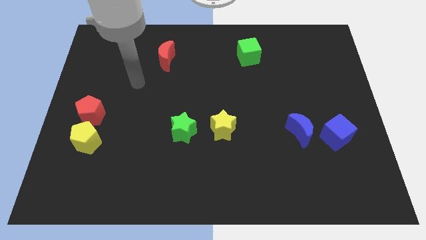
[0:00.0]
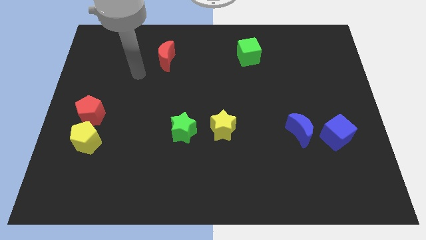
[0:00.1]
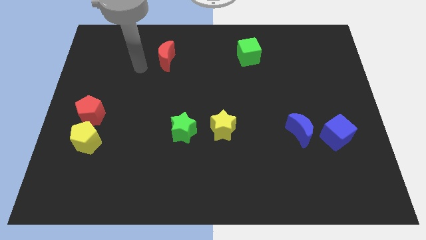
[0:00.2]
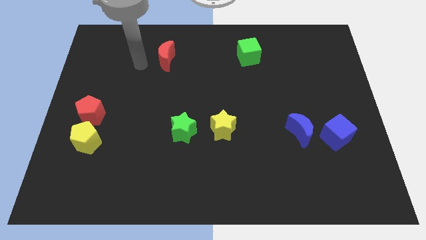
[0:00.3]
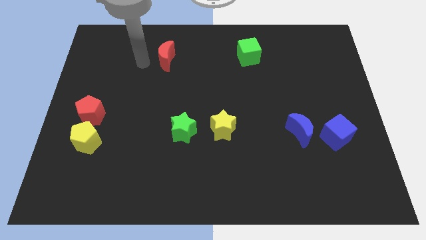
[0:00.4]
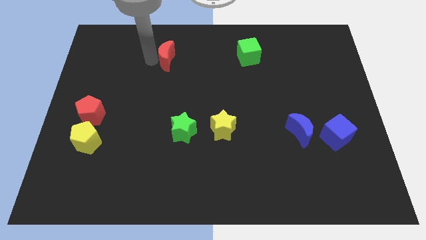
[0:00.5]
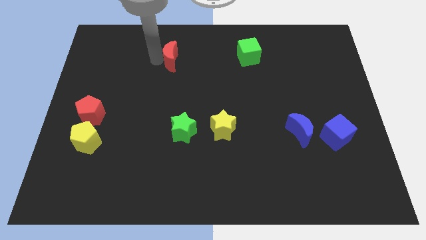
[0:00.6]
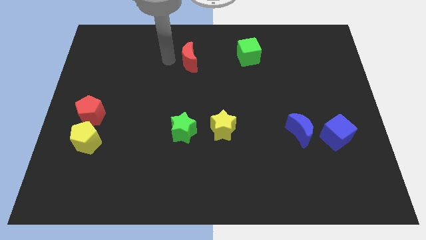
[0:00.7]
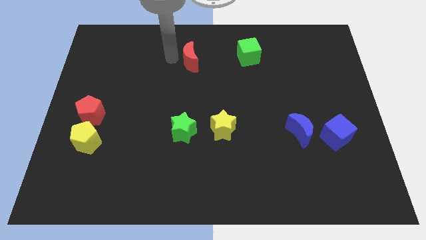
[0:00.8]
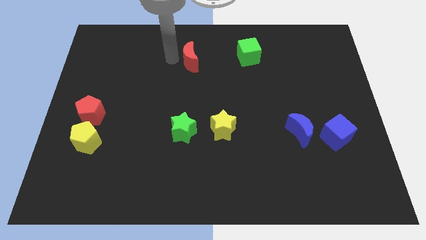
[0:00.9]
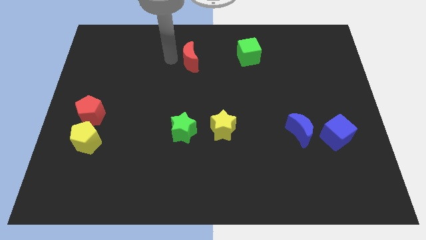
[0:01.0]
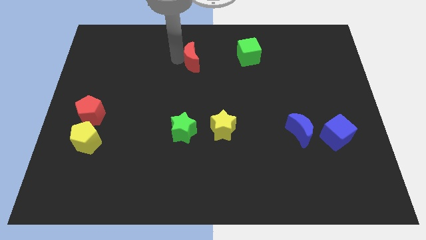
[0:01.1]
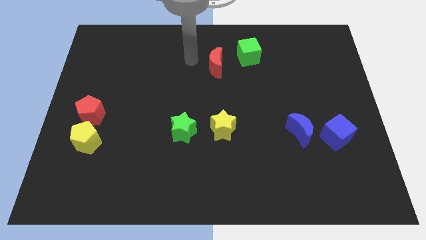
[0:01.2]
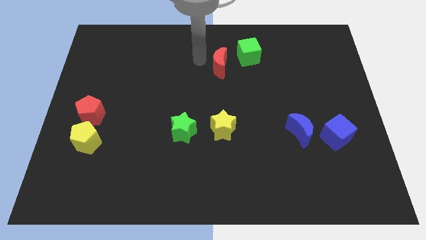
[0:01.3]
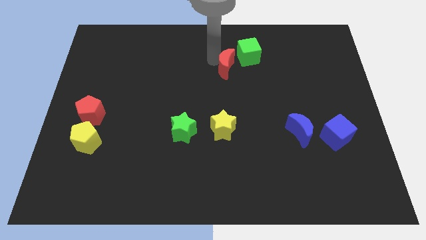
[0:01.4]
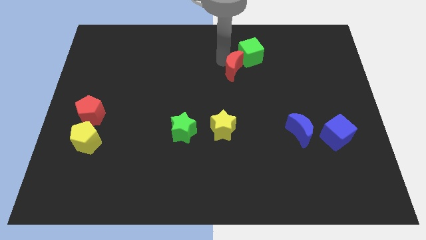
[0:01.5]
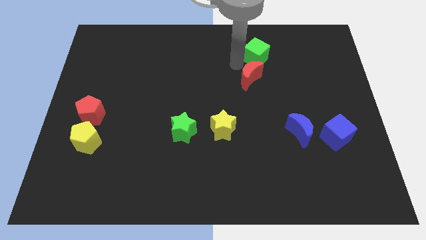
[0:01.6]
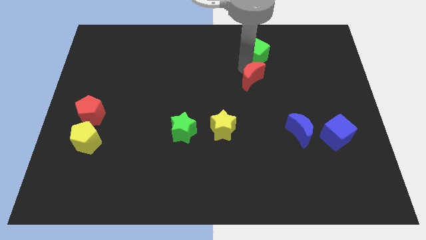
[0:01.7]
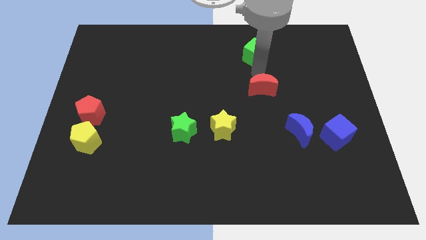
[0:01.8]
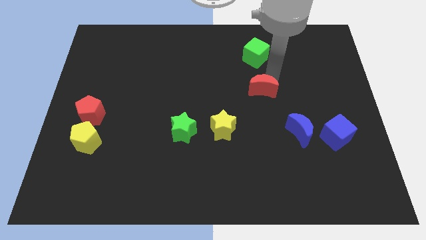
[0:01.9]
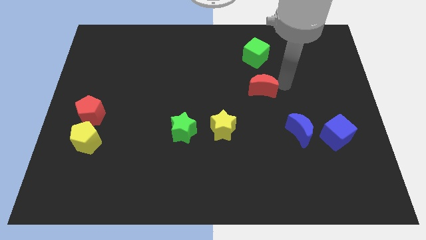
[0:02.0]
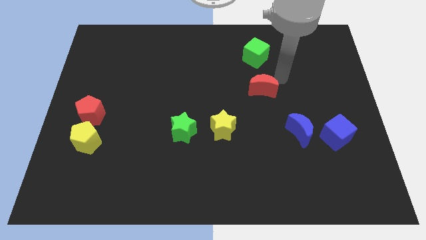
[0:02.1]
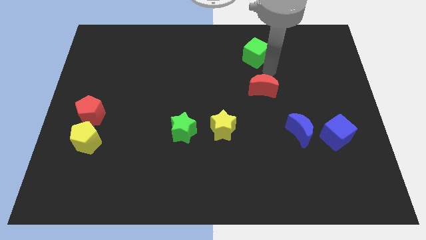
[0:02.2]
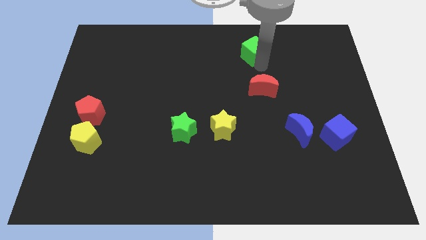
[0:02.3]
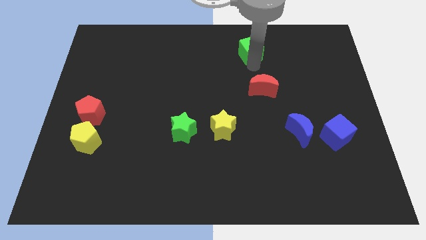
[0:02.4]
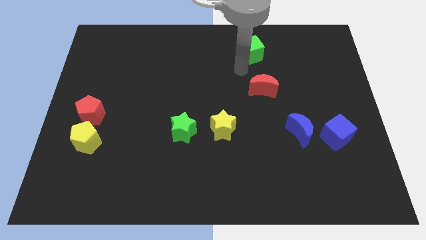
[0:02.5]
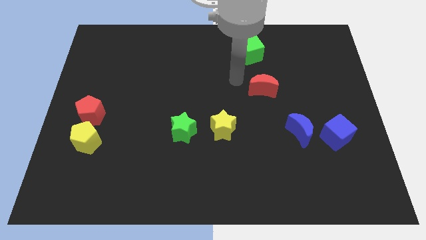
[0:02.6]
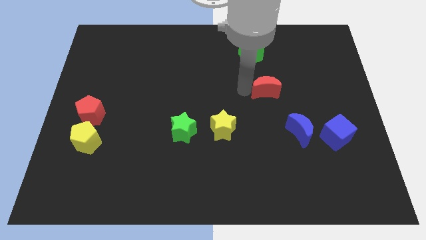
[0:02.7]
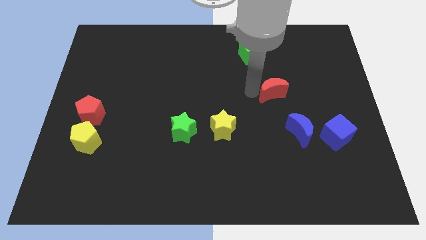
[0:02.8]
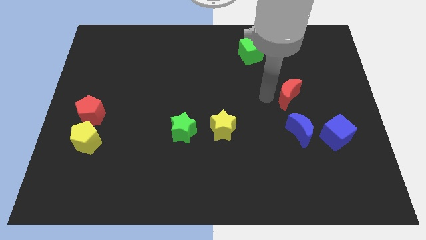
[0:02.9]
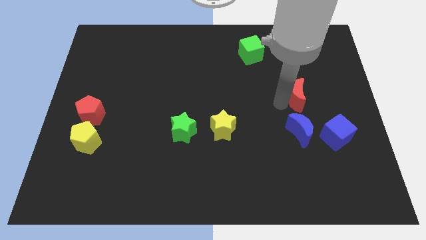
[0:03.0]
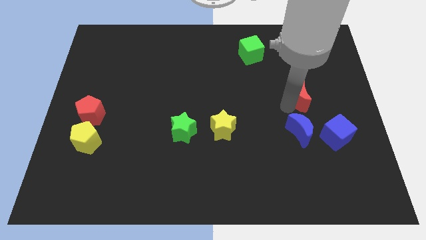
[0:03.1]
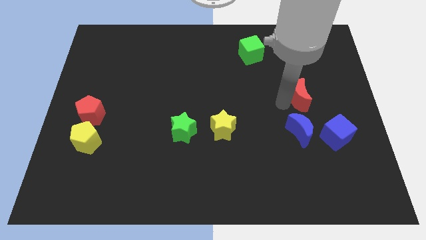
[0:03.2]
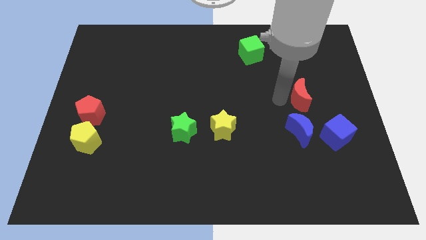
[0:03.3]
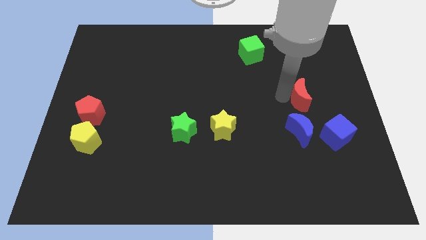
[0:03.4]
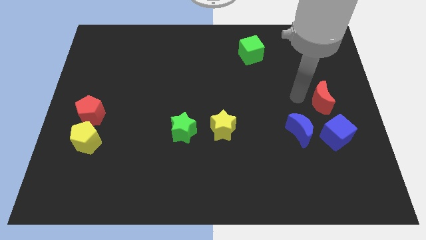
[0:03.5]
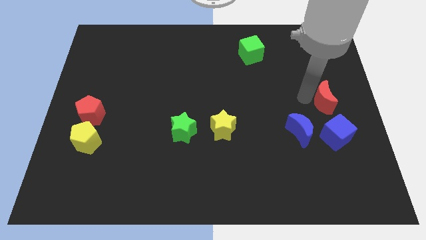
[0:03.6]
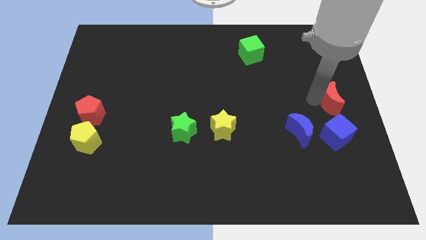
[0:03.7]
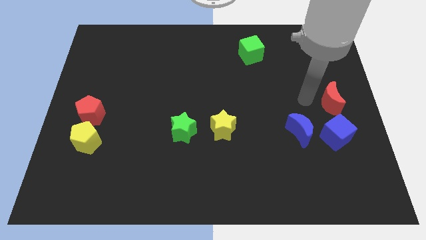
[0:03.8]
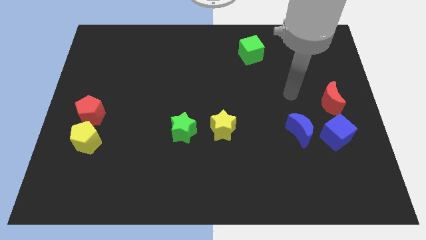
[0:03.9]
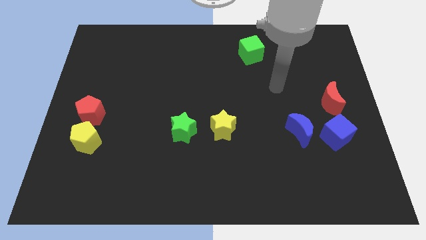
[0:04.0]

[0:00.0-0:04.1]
place the red crescent above the blue cube

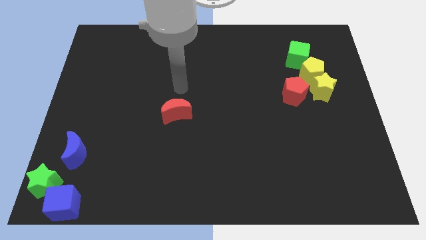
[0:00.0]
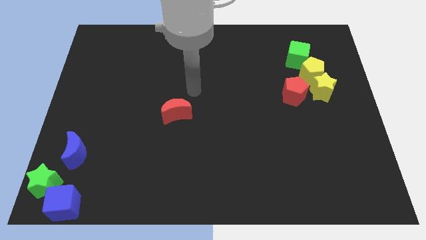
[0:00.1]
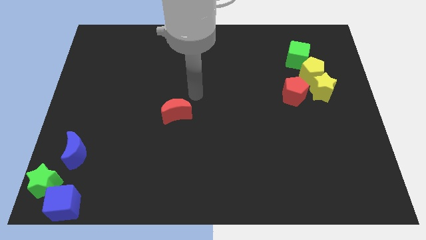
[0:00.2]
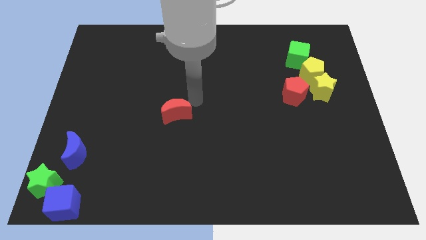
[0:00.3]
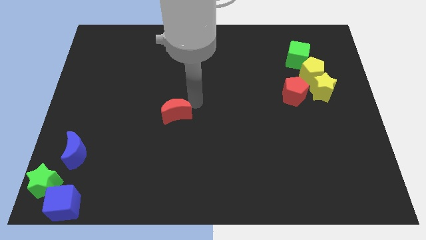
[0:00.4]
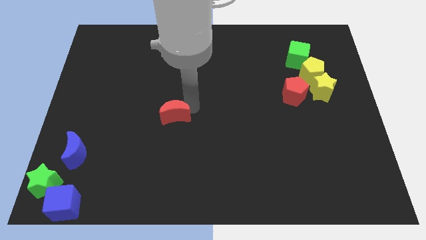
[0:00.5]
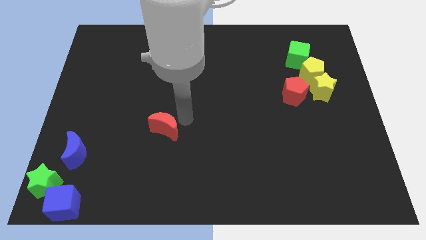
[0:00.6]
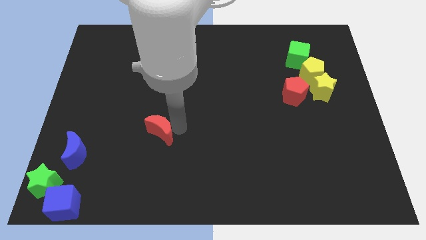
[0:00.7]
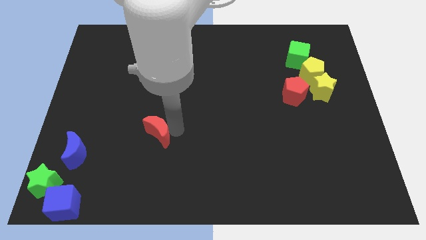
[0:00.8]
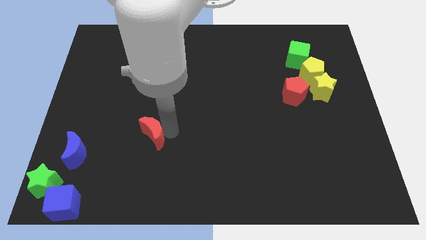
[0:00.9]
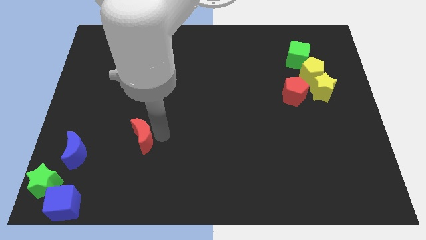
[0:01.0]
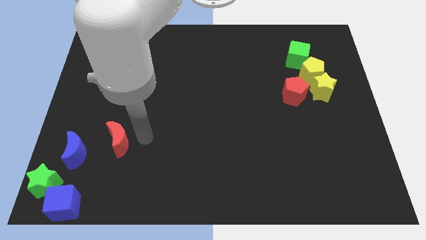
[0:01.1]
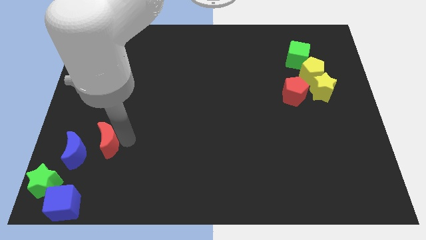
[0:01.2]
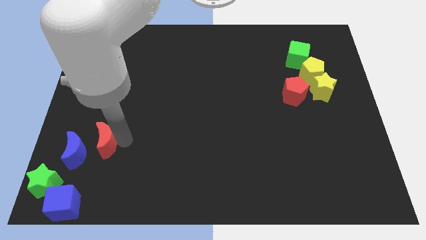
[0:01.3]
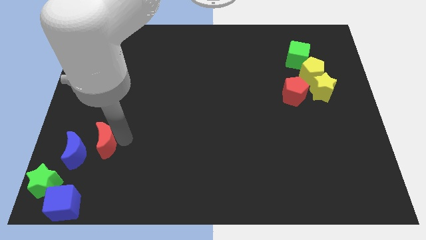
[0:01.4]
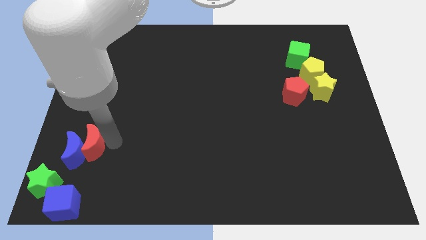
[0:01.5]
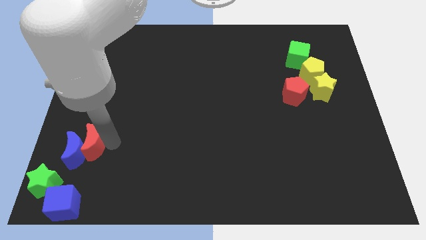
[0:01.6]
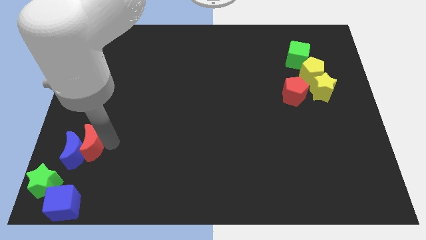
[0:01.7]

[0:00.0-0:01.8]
push the red crescent to the right of the blue crescent

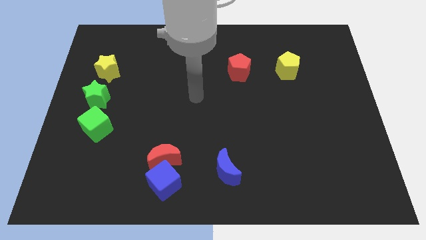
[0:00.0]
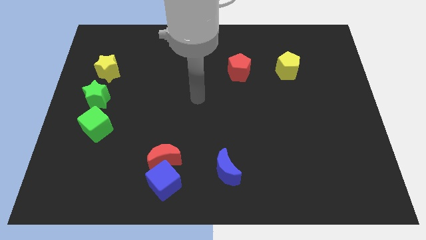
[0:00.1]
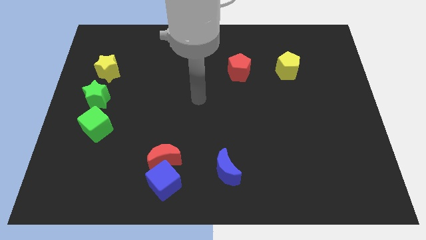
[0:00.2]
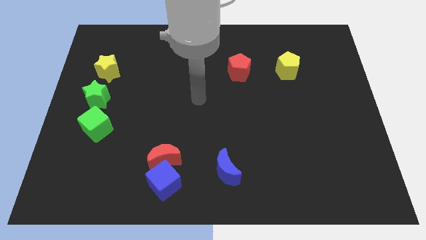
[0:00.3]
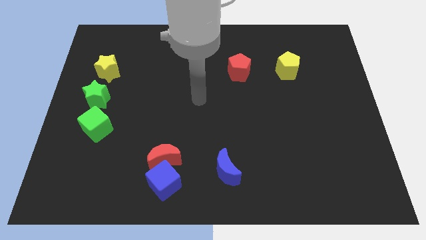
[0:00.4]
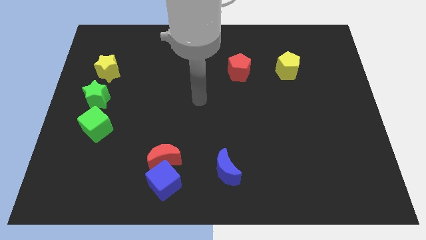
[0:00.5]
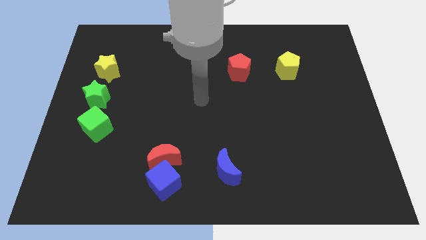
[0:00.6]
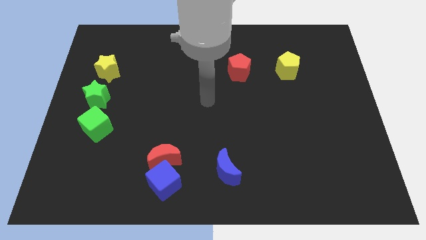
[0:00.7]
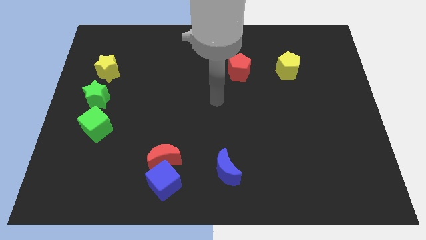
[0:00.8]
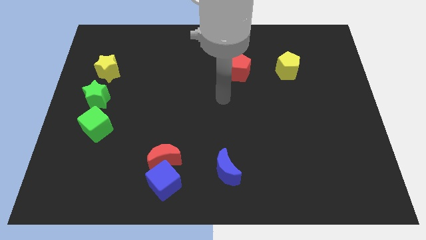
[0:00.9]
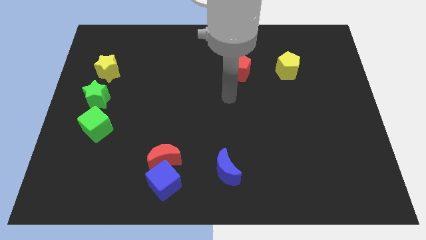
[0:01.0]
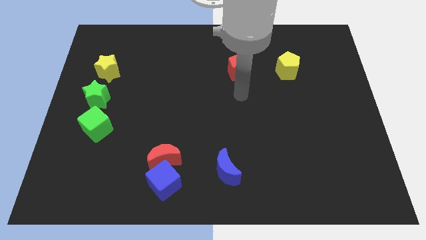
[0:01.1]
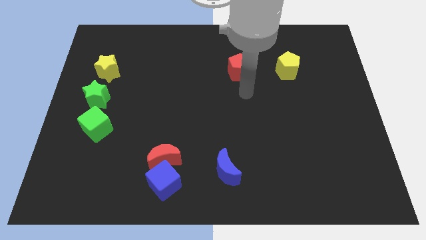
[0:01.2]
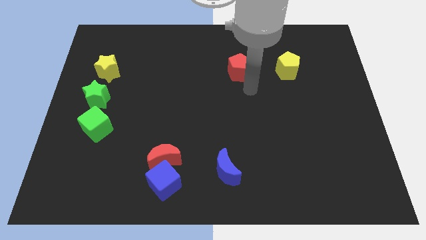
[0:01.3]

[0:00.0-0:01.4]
place your arm at the bottom right side of red pentagon

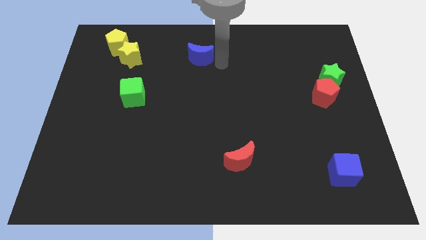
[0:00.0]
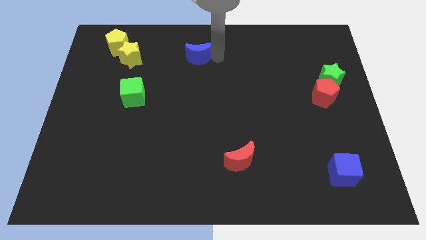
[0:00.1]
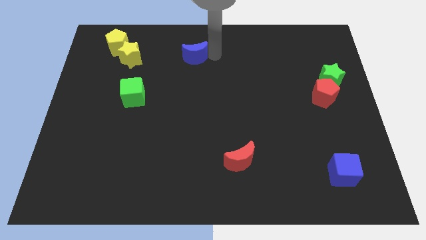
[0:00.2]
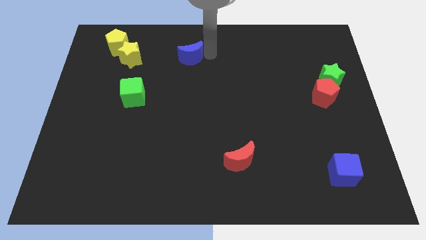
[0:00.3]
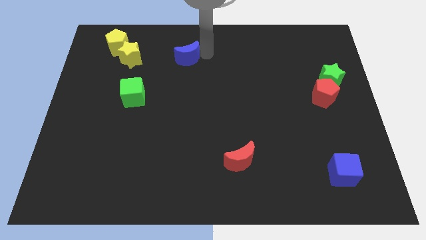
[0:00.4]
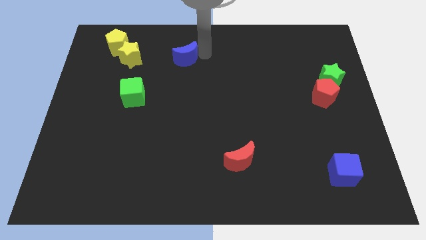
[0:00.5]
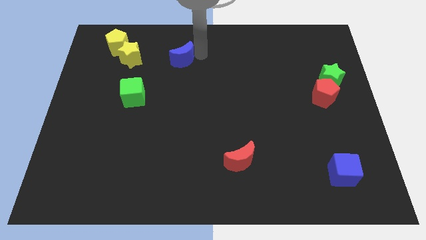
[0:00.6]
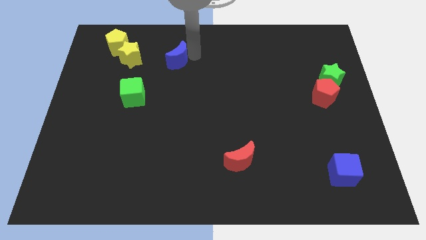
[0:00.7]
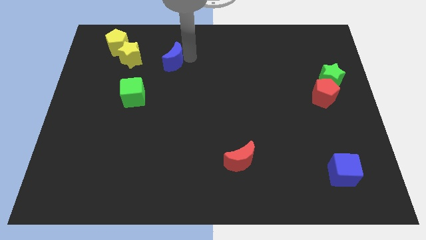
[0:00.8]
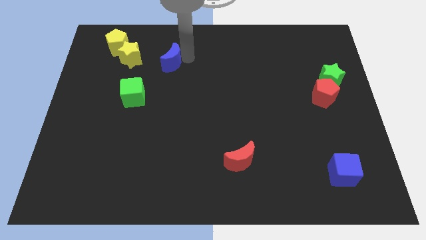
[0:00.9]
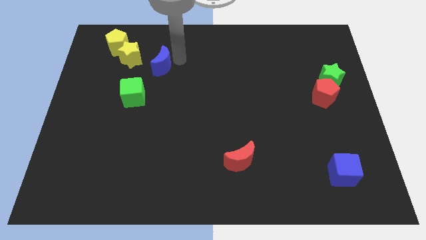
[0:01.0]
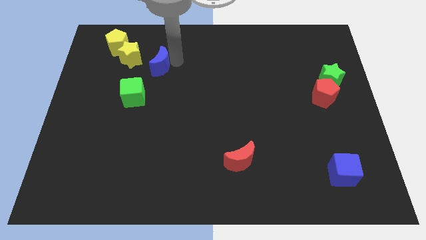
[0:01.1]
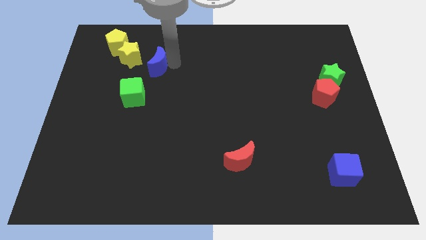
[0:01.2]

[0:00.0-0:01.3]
push blue crescent towards yellow star

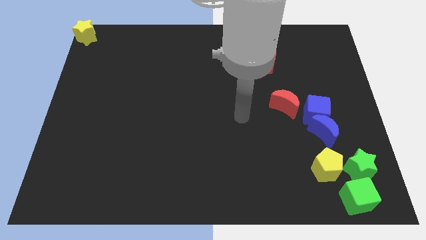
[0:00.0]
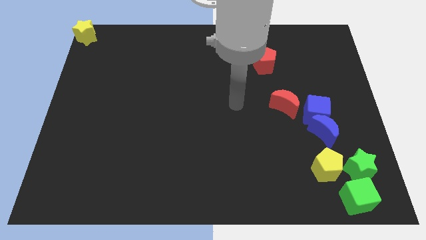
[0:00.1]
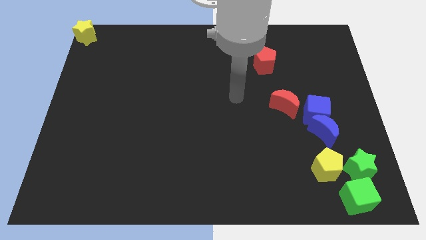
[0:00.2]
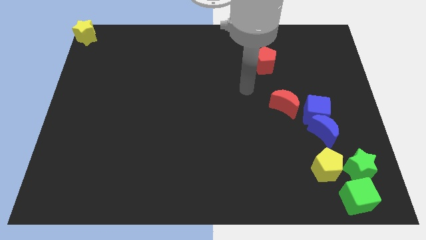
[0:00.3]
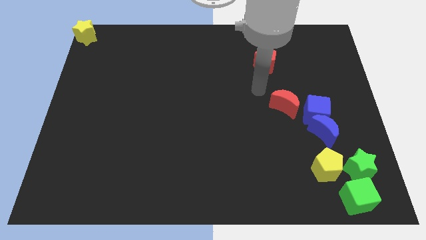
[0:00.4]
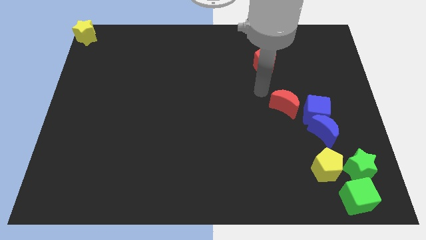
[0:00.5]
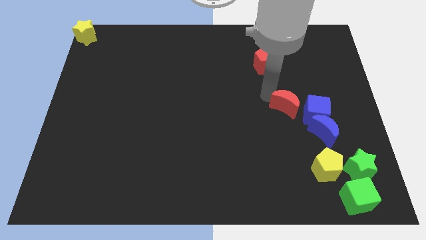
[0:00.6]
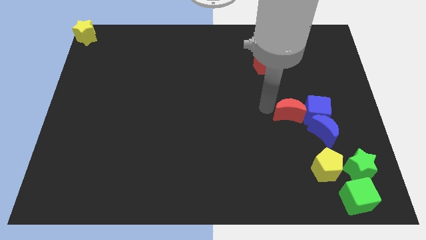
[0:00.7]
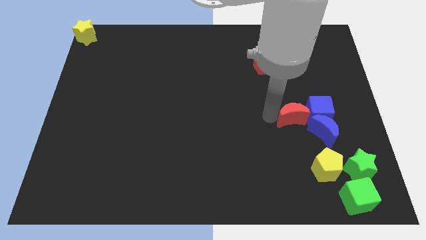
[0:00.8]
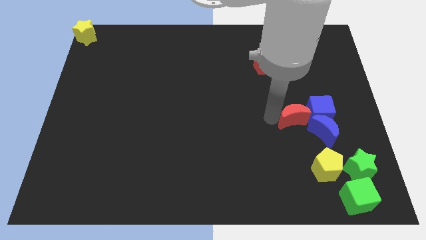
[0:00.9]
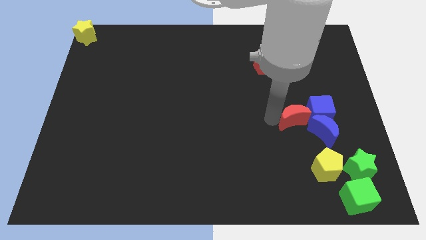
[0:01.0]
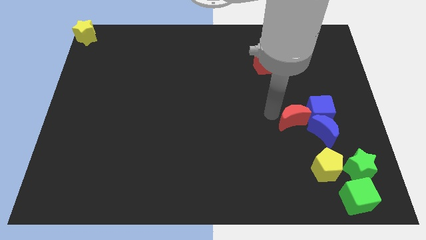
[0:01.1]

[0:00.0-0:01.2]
move the red crescent into the left side of the blue cube
